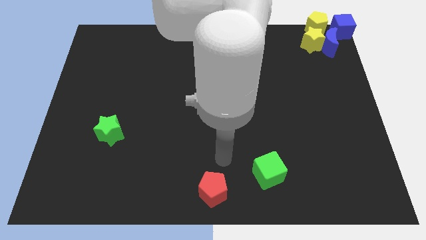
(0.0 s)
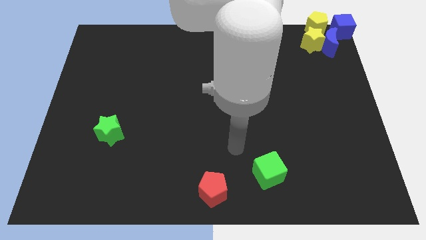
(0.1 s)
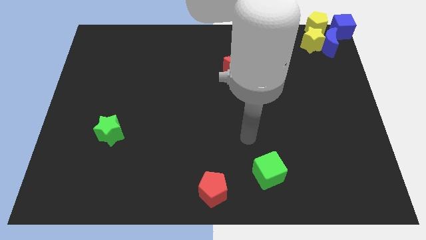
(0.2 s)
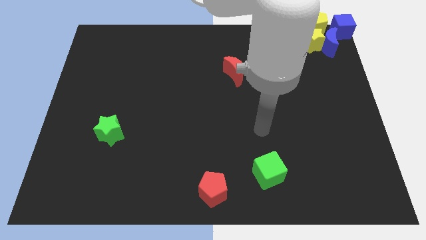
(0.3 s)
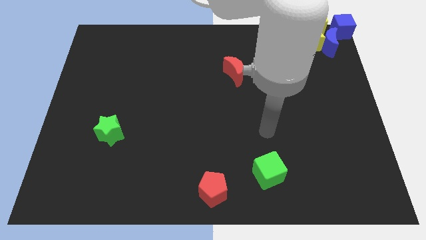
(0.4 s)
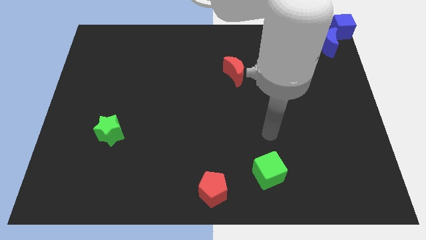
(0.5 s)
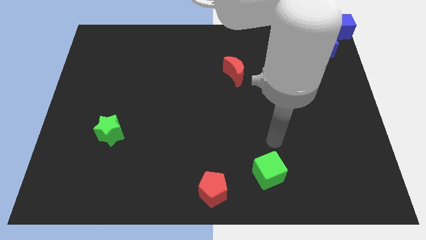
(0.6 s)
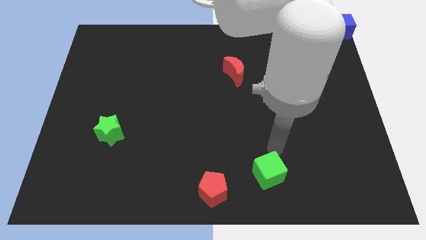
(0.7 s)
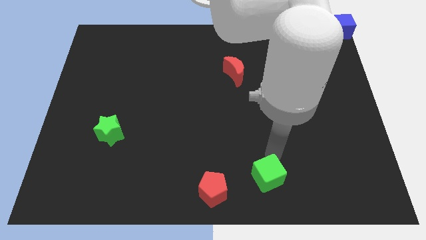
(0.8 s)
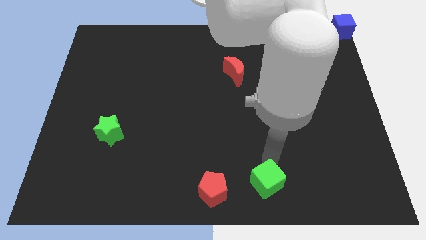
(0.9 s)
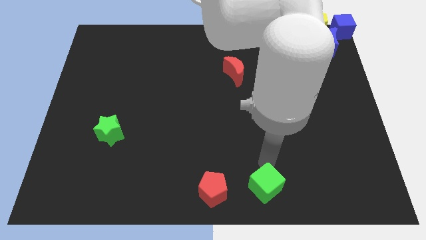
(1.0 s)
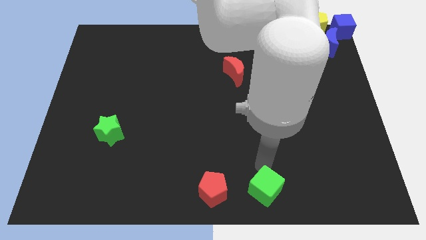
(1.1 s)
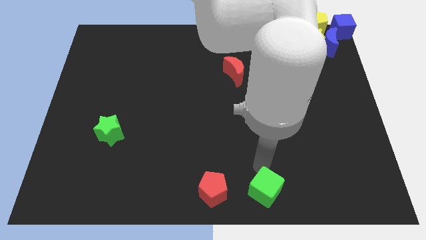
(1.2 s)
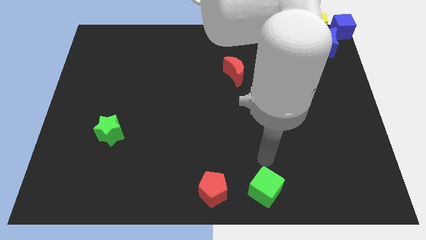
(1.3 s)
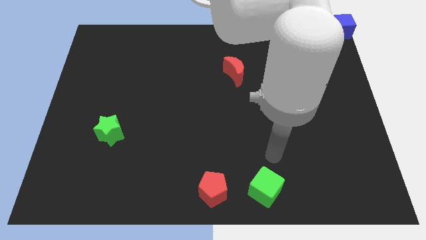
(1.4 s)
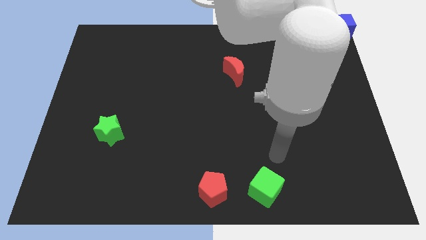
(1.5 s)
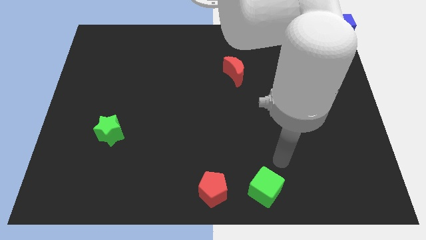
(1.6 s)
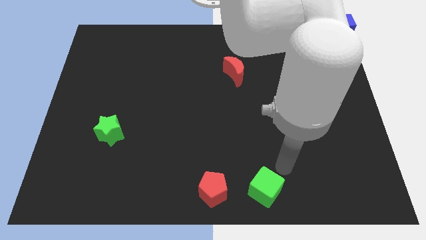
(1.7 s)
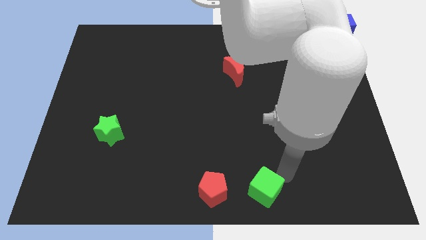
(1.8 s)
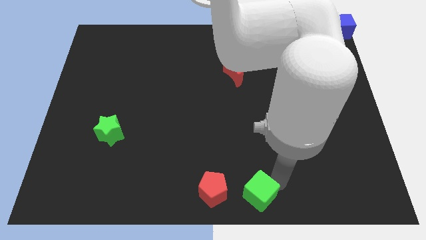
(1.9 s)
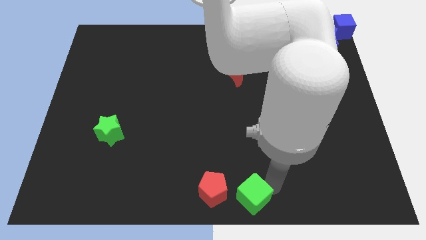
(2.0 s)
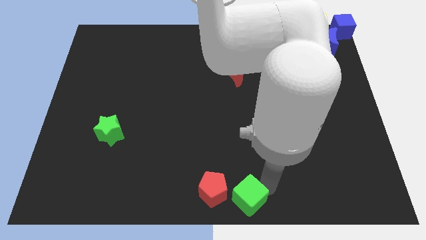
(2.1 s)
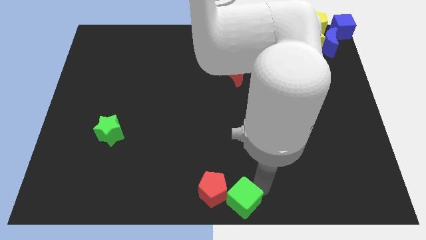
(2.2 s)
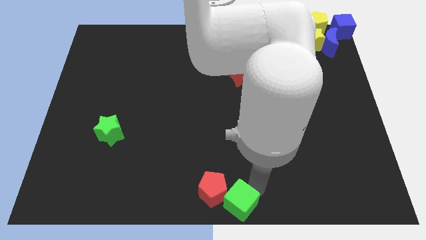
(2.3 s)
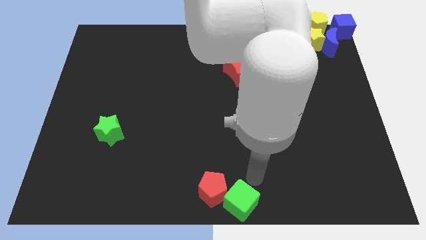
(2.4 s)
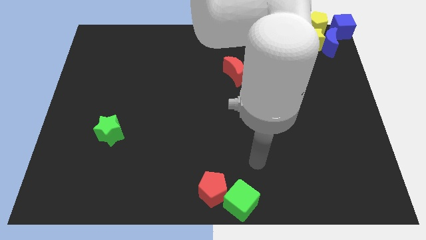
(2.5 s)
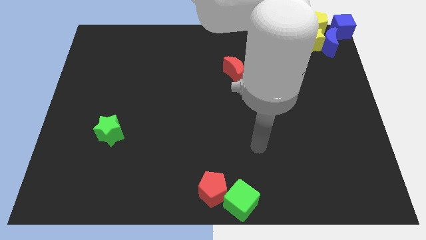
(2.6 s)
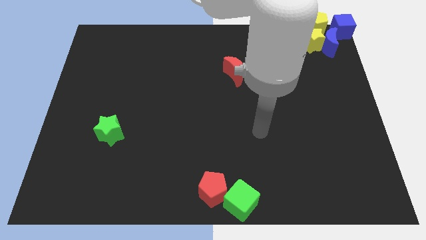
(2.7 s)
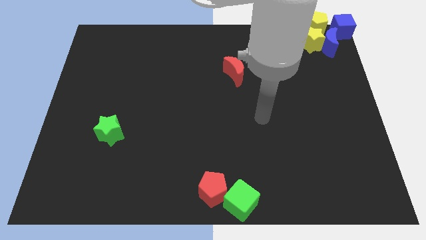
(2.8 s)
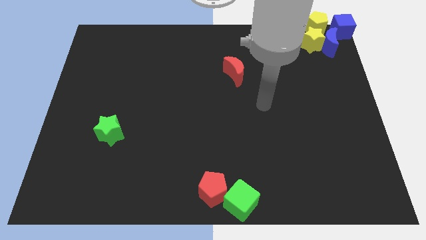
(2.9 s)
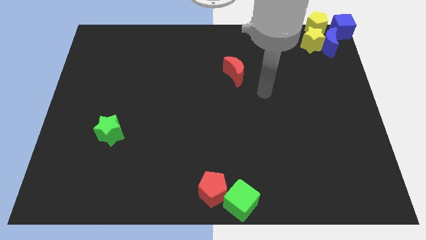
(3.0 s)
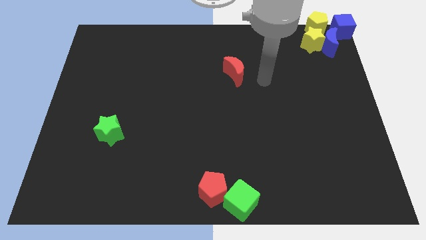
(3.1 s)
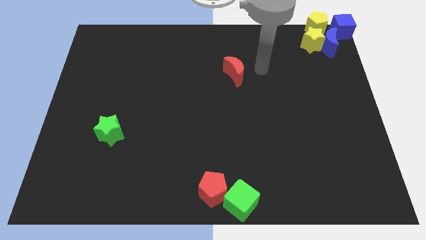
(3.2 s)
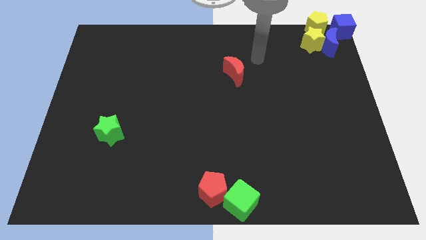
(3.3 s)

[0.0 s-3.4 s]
move the green cube to the bottom right side of the red pentagon

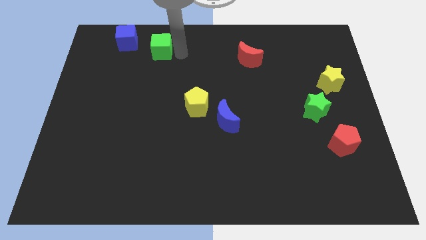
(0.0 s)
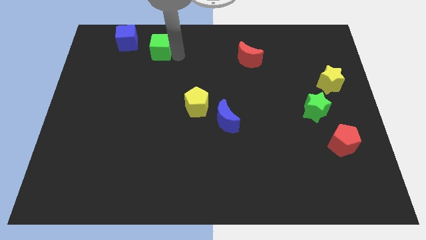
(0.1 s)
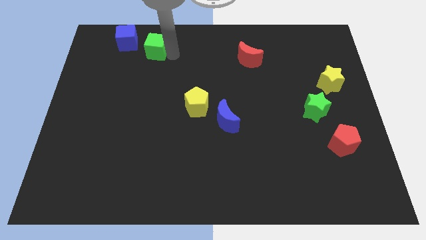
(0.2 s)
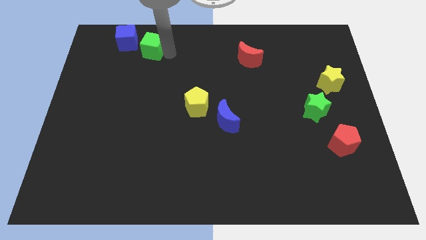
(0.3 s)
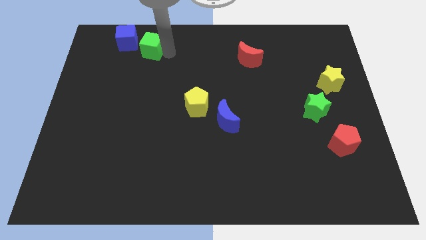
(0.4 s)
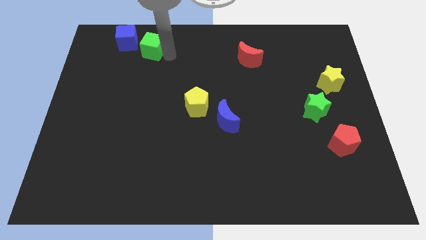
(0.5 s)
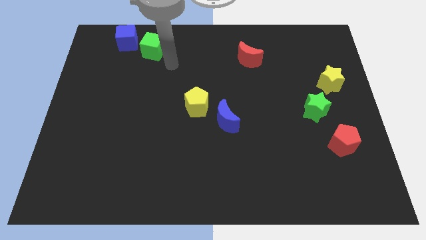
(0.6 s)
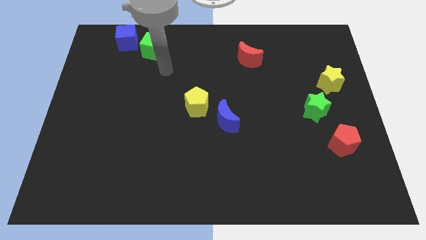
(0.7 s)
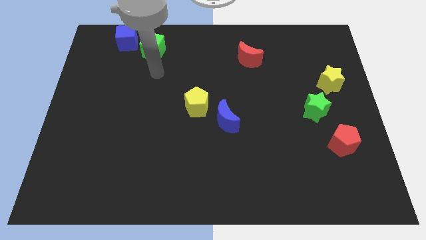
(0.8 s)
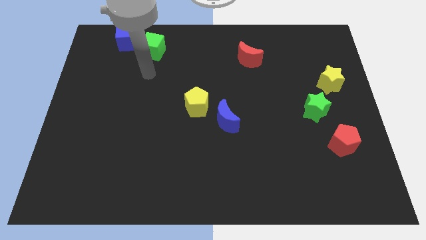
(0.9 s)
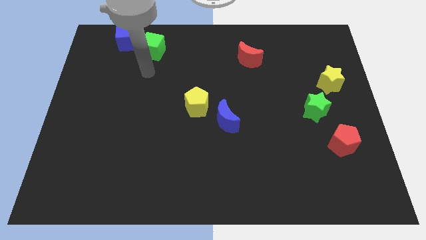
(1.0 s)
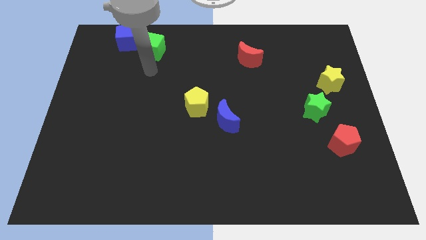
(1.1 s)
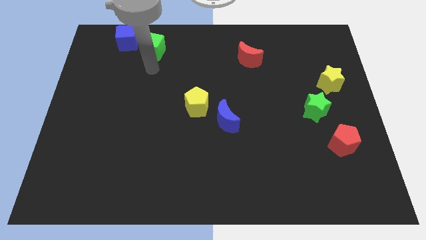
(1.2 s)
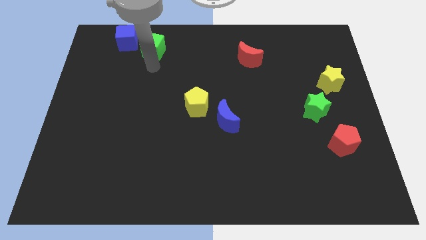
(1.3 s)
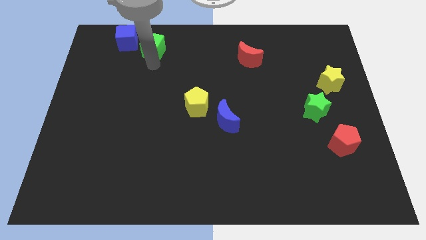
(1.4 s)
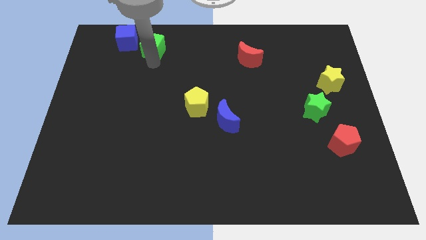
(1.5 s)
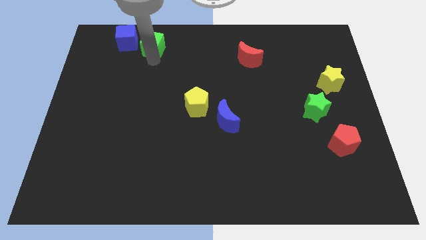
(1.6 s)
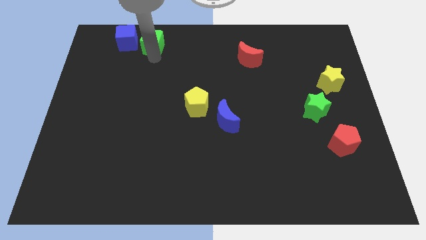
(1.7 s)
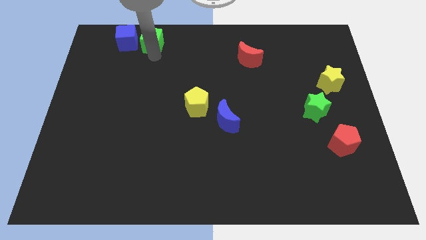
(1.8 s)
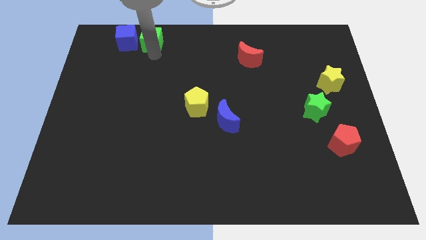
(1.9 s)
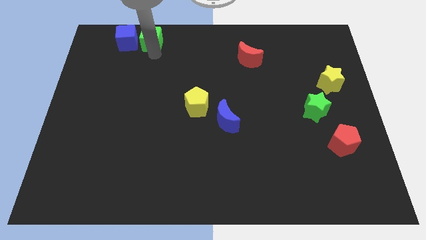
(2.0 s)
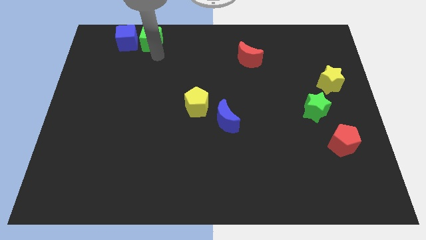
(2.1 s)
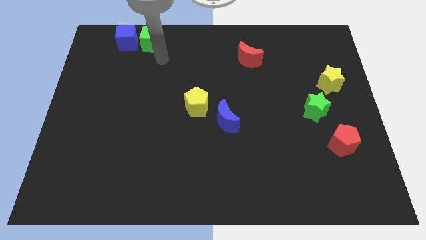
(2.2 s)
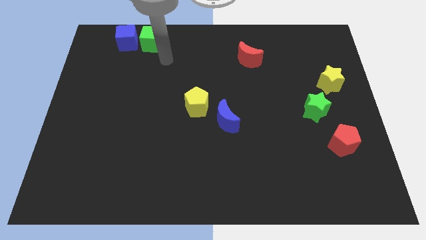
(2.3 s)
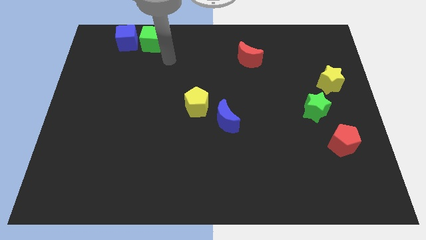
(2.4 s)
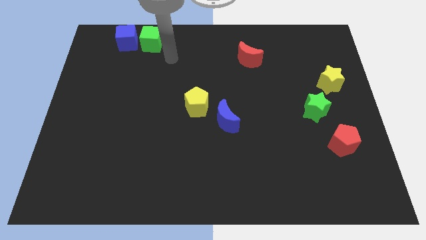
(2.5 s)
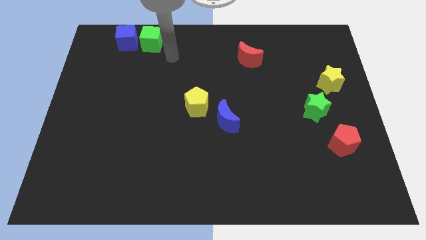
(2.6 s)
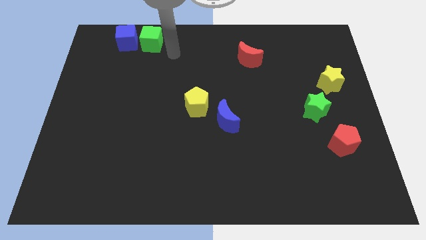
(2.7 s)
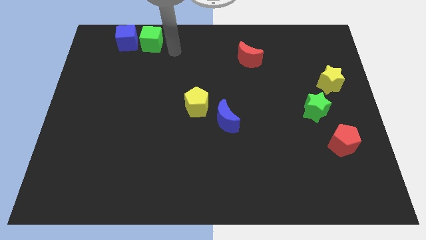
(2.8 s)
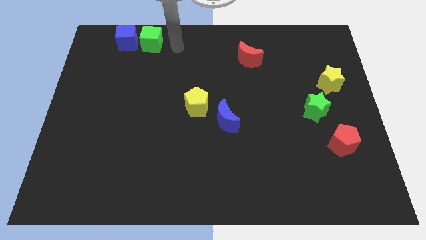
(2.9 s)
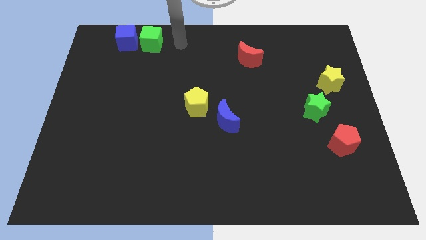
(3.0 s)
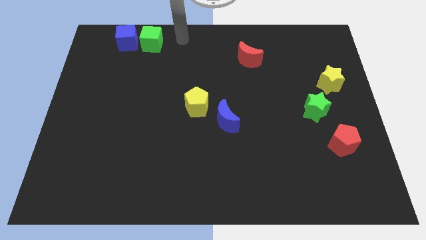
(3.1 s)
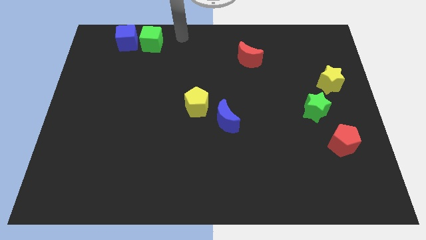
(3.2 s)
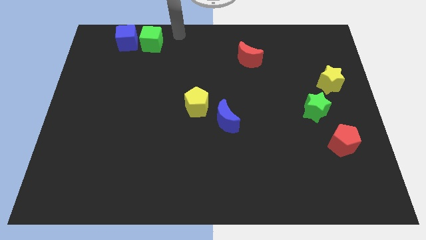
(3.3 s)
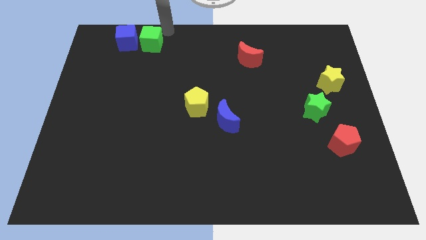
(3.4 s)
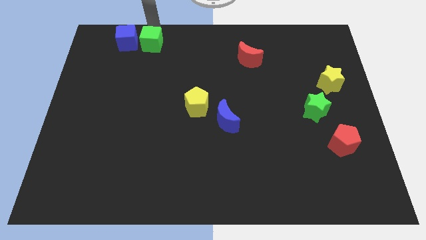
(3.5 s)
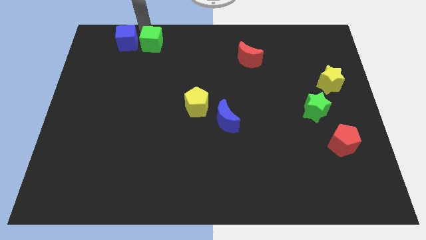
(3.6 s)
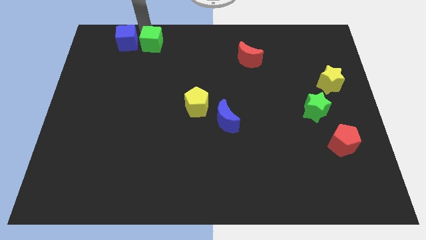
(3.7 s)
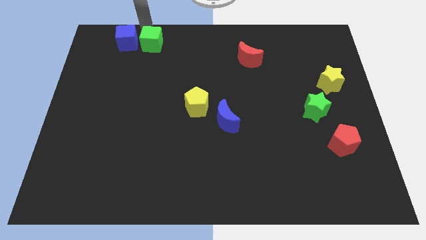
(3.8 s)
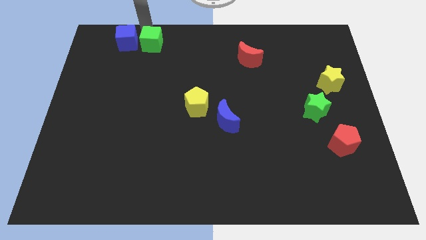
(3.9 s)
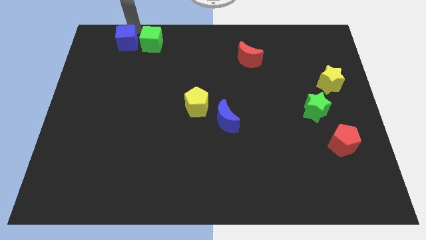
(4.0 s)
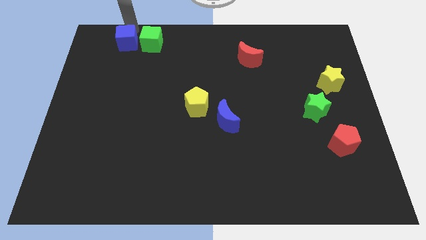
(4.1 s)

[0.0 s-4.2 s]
place the green cube at the right of the blue cube

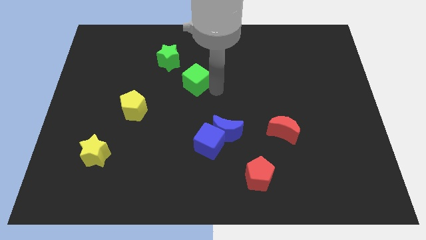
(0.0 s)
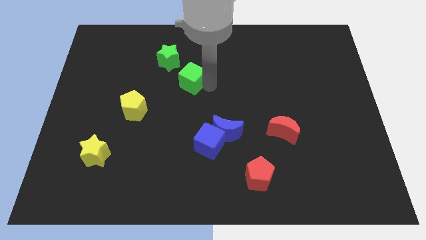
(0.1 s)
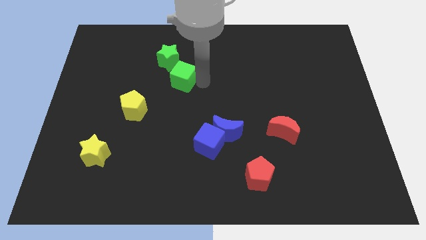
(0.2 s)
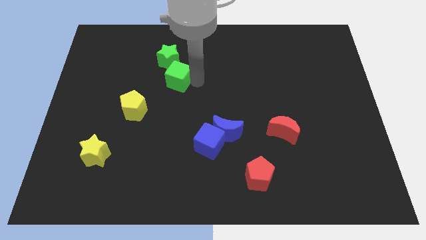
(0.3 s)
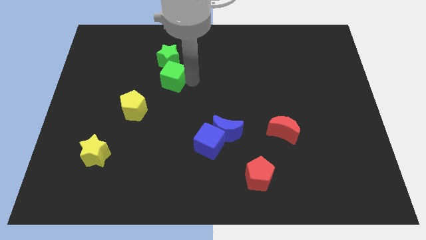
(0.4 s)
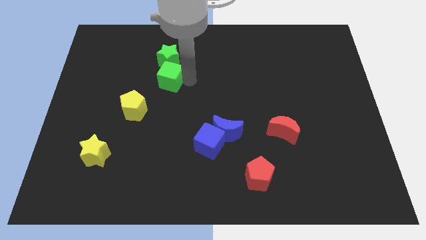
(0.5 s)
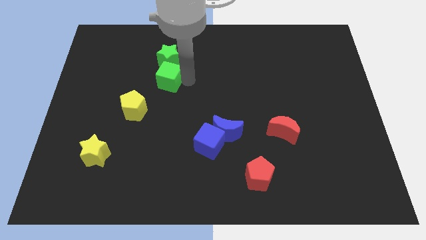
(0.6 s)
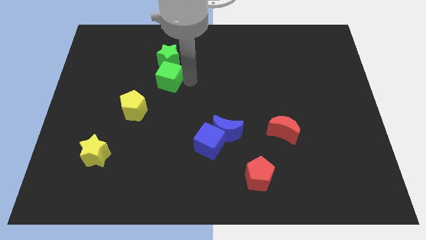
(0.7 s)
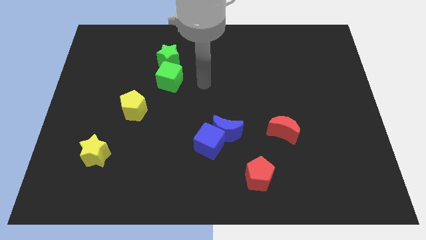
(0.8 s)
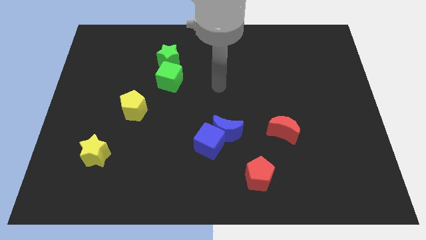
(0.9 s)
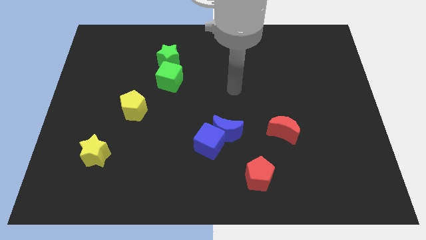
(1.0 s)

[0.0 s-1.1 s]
move green cube below the green star

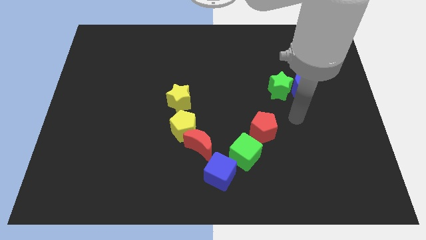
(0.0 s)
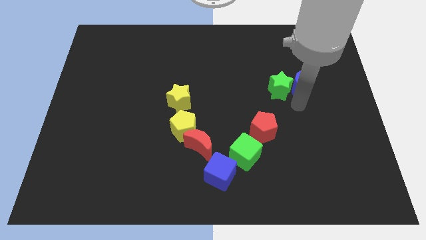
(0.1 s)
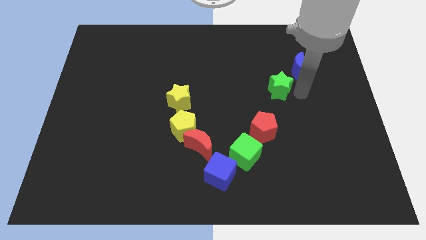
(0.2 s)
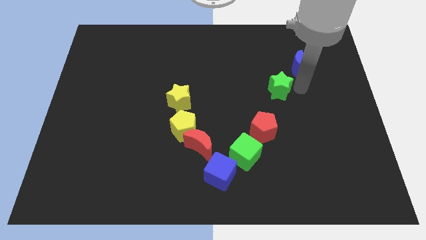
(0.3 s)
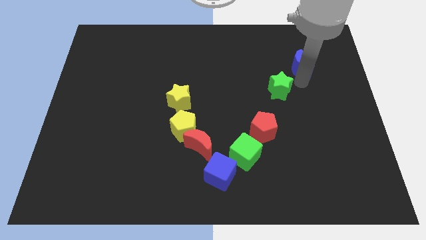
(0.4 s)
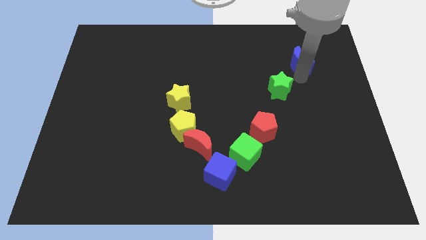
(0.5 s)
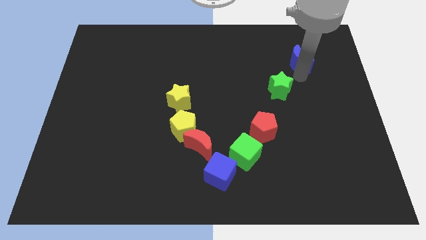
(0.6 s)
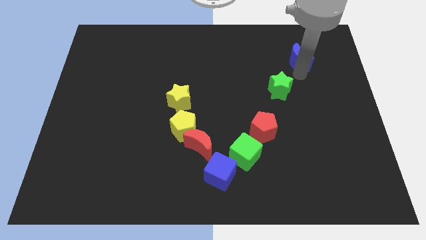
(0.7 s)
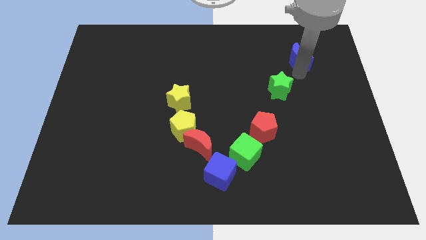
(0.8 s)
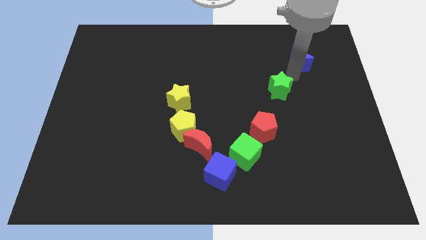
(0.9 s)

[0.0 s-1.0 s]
separate green star and blue moon
